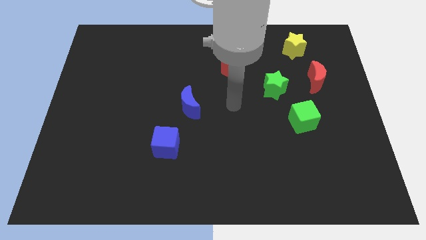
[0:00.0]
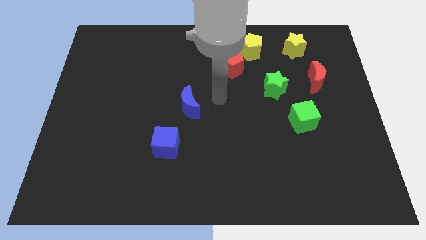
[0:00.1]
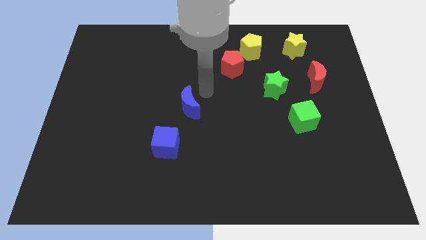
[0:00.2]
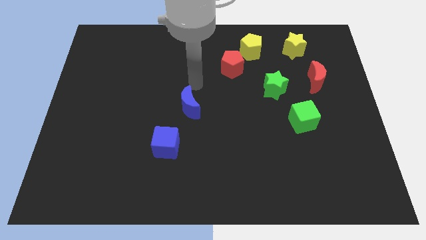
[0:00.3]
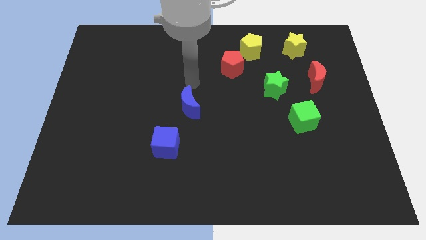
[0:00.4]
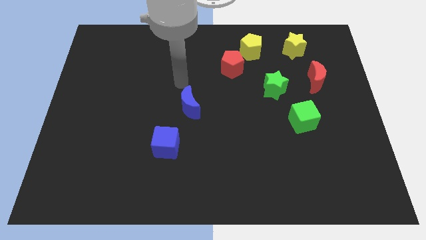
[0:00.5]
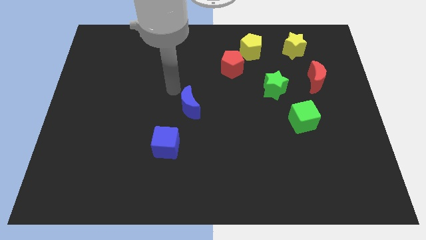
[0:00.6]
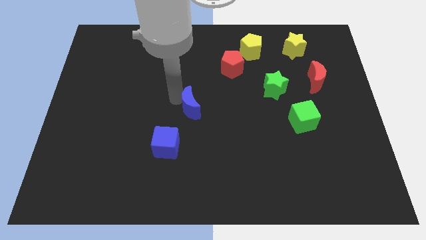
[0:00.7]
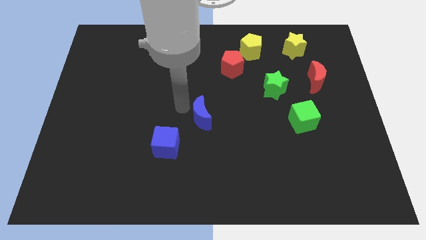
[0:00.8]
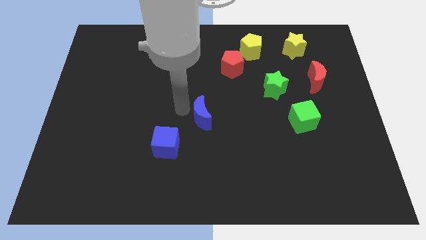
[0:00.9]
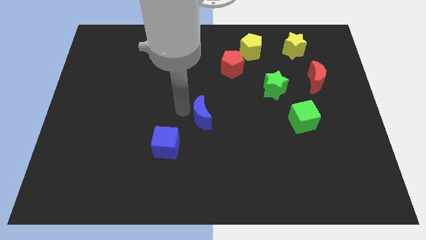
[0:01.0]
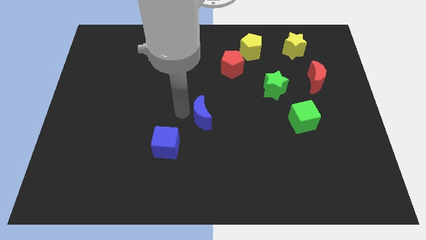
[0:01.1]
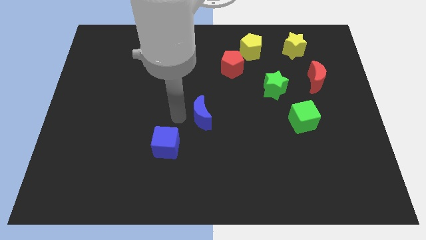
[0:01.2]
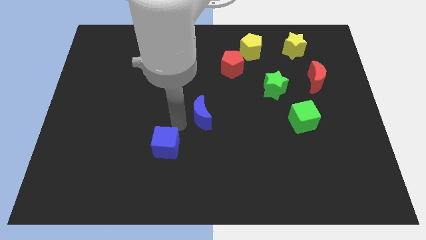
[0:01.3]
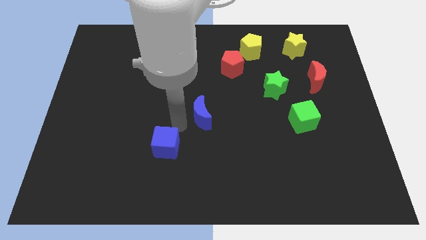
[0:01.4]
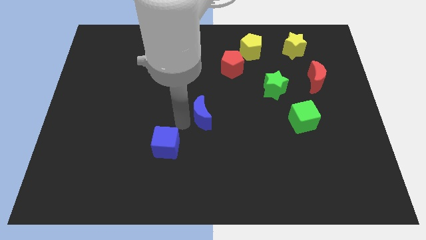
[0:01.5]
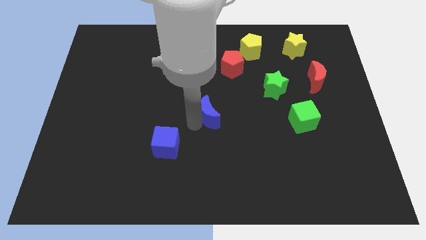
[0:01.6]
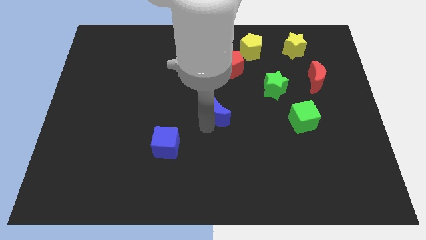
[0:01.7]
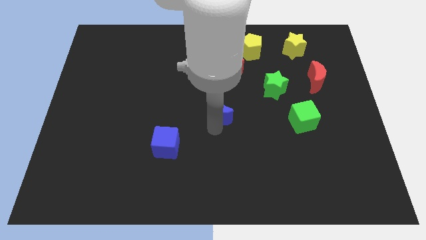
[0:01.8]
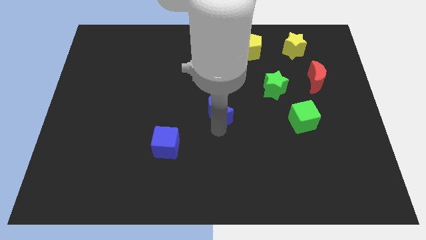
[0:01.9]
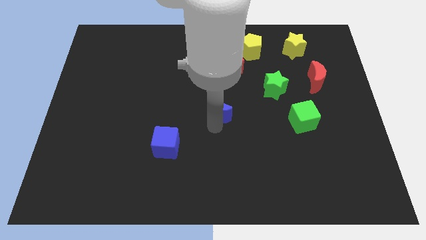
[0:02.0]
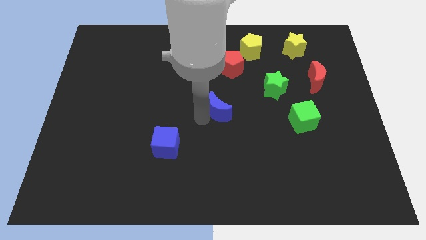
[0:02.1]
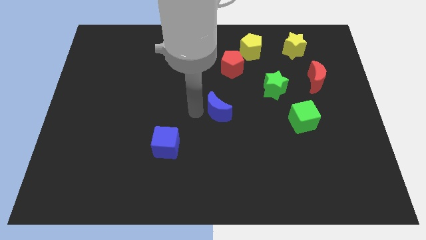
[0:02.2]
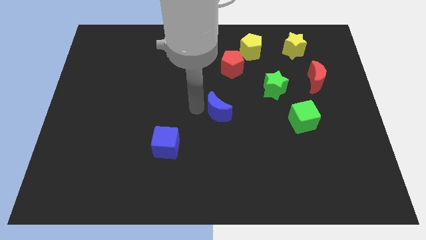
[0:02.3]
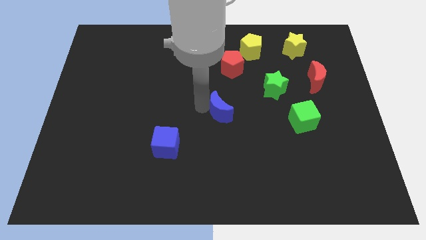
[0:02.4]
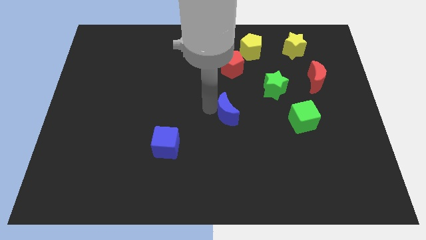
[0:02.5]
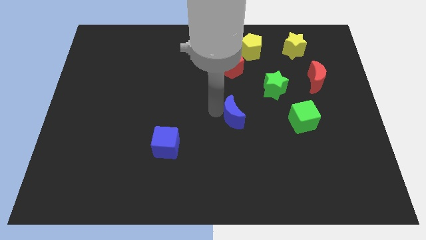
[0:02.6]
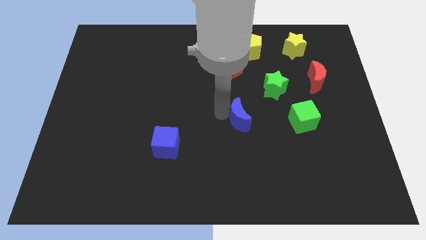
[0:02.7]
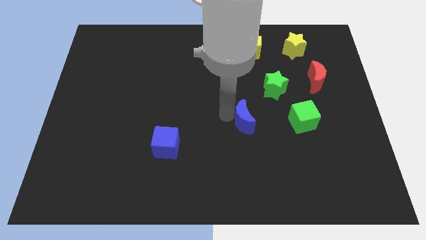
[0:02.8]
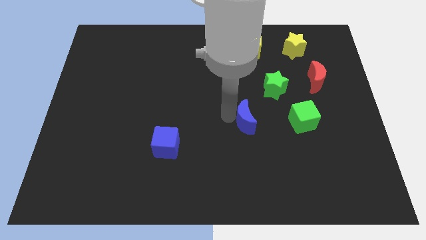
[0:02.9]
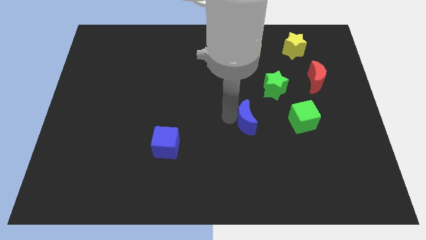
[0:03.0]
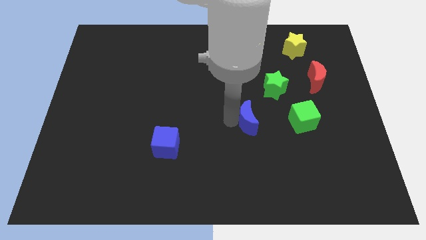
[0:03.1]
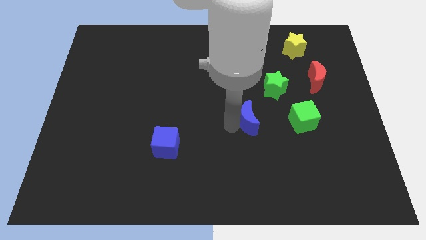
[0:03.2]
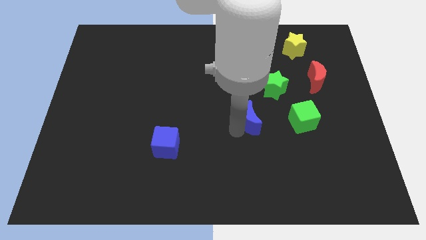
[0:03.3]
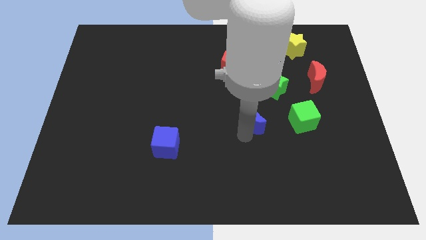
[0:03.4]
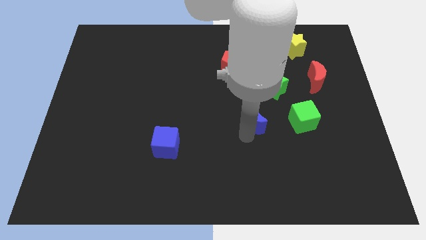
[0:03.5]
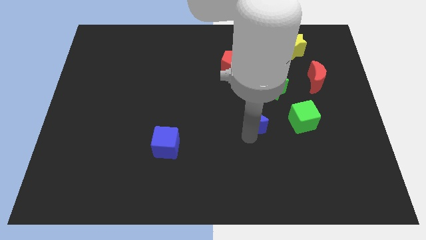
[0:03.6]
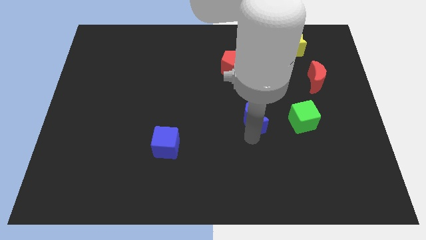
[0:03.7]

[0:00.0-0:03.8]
move the blue crescent slightly to the right side of the board

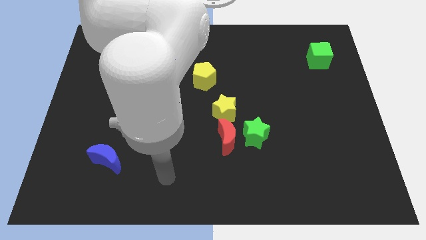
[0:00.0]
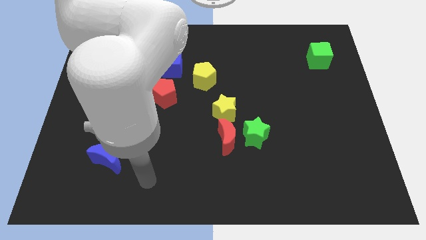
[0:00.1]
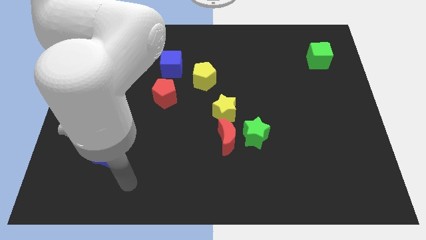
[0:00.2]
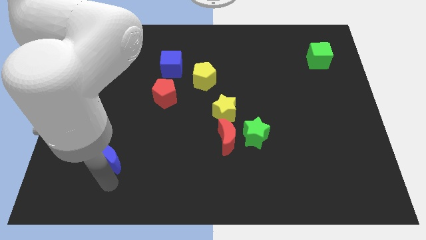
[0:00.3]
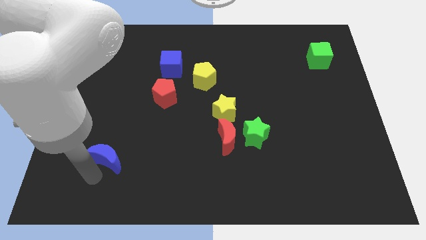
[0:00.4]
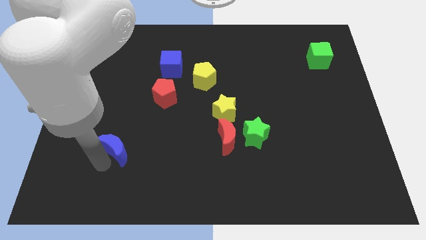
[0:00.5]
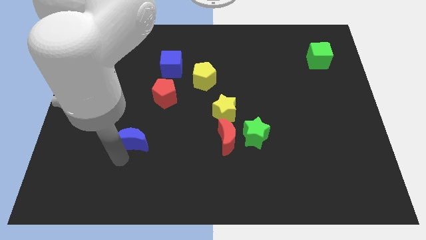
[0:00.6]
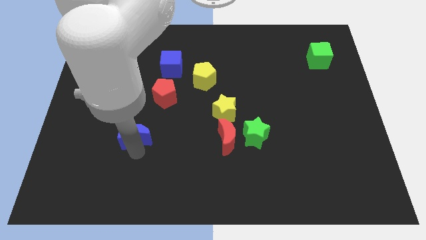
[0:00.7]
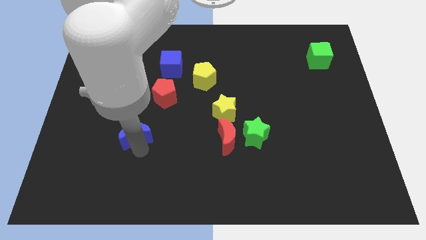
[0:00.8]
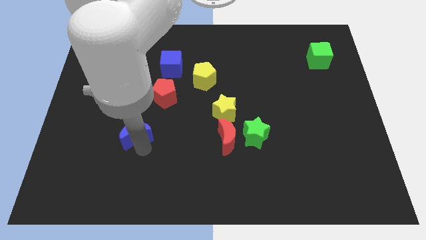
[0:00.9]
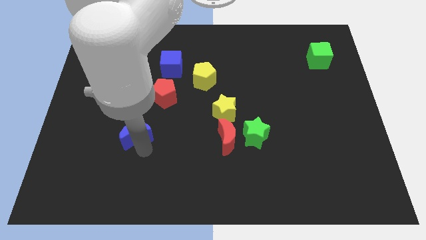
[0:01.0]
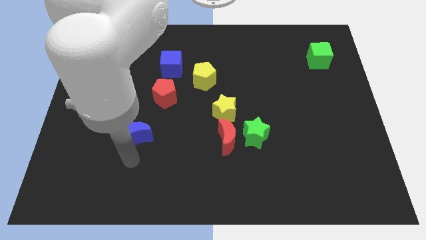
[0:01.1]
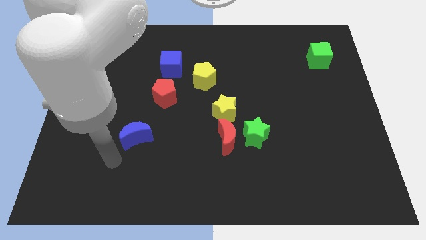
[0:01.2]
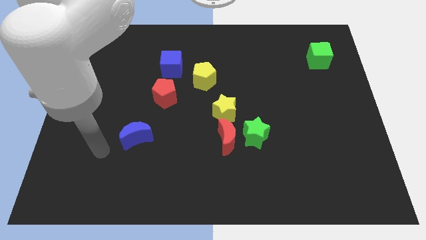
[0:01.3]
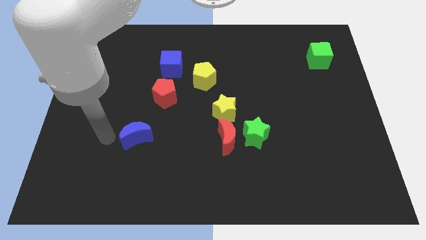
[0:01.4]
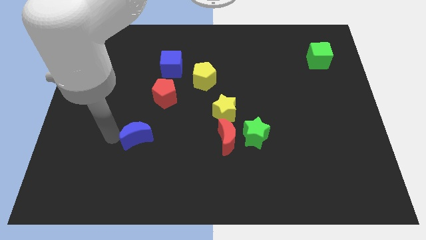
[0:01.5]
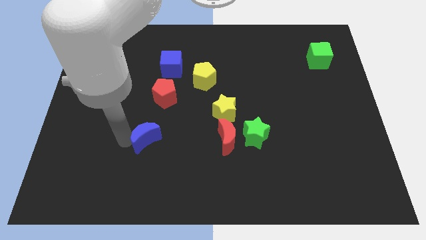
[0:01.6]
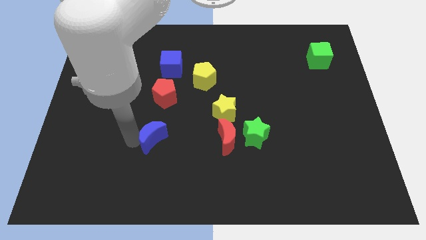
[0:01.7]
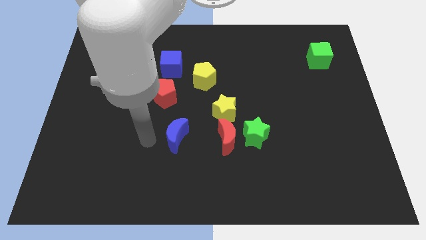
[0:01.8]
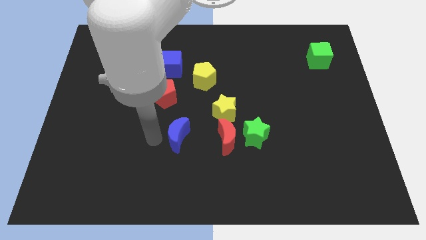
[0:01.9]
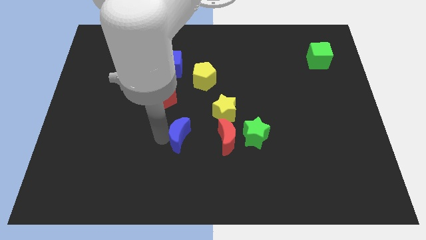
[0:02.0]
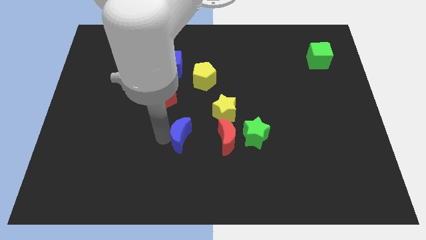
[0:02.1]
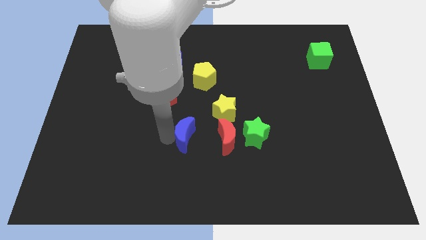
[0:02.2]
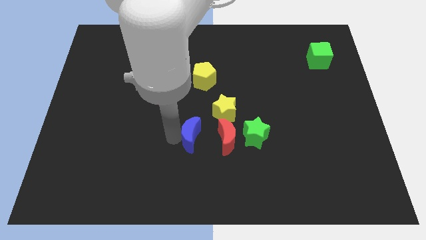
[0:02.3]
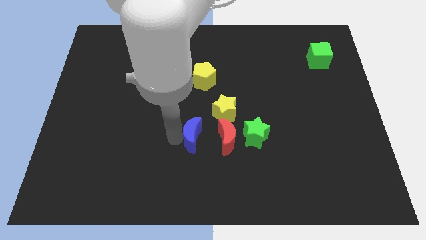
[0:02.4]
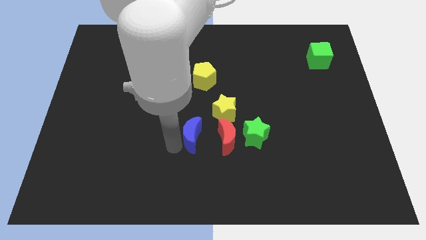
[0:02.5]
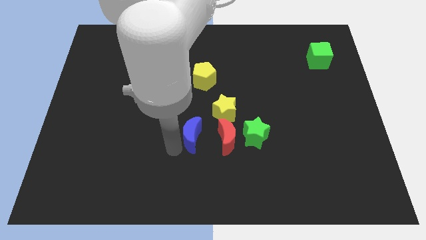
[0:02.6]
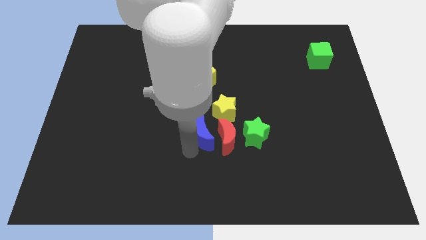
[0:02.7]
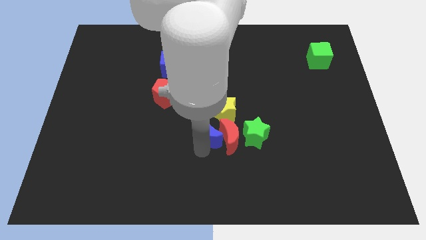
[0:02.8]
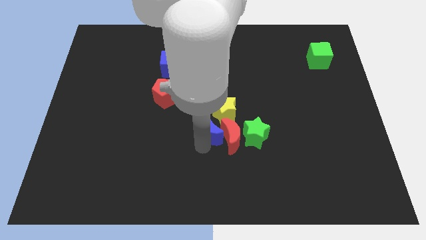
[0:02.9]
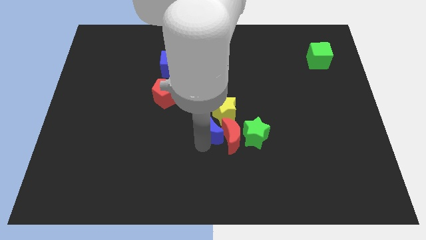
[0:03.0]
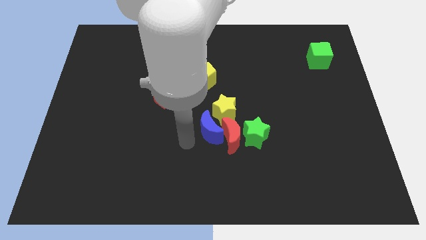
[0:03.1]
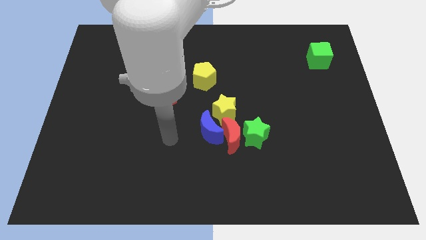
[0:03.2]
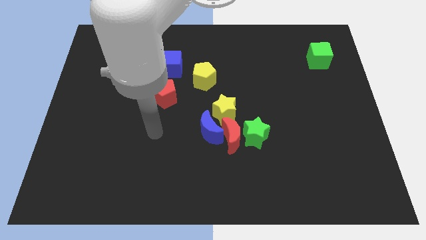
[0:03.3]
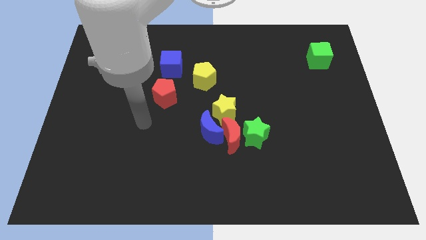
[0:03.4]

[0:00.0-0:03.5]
place the blue moon to the left of the red moon

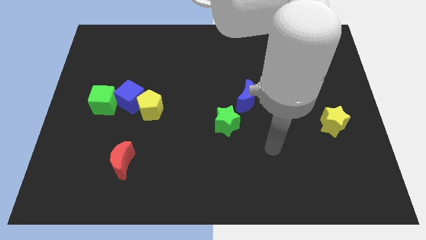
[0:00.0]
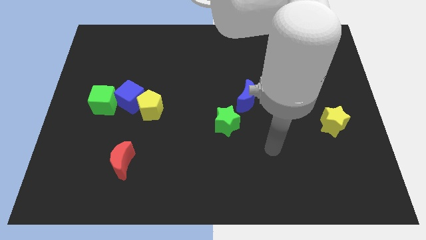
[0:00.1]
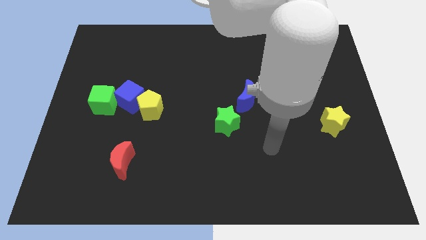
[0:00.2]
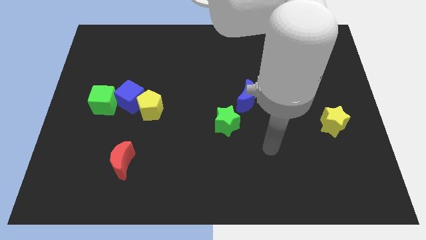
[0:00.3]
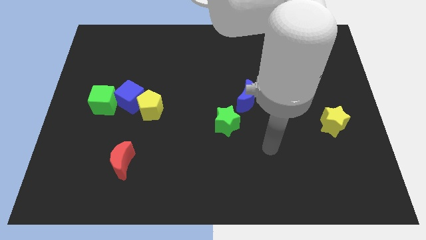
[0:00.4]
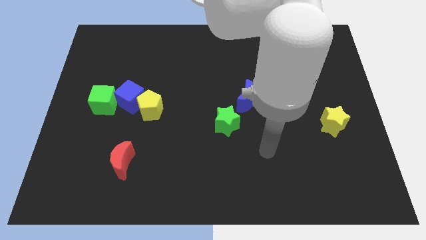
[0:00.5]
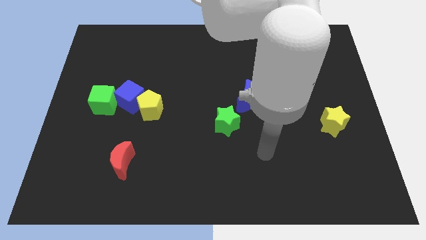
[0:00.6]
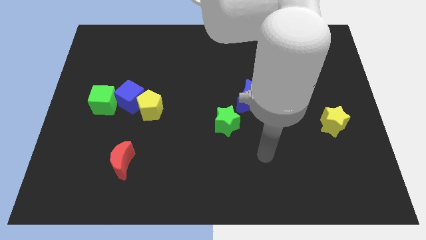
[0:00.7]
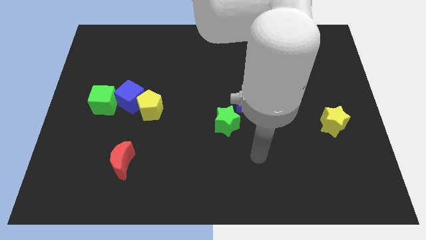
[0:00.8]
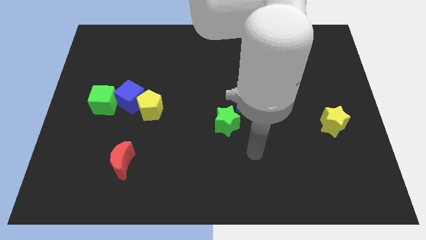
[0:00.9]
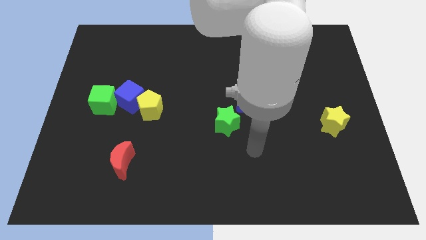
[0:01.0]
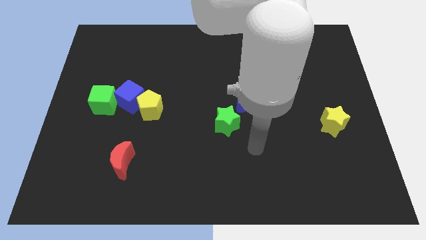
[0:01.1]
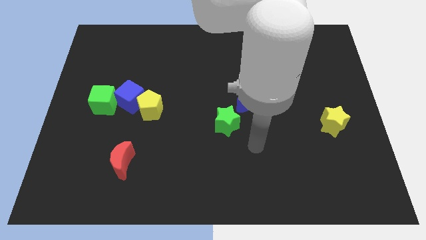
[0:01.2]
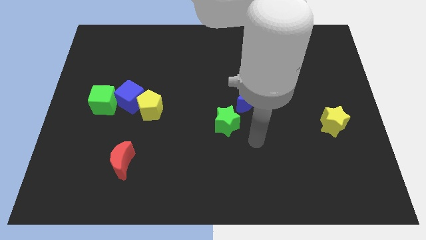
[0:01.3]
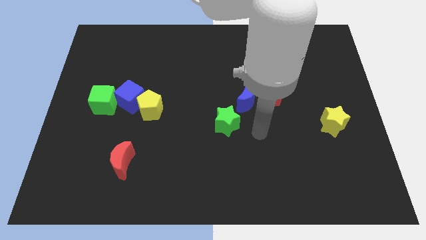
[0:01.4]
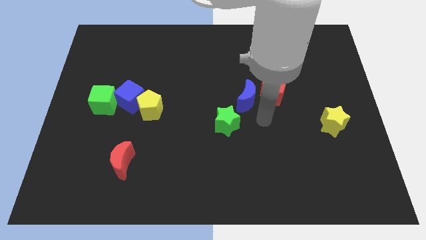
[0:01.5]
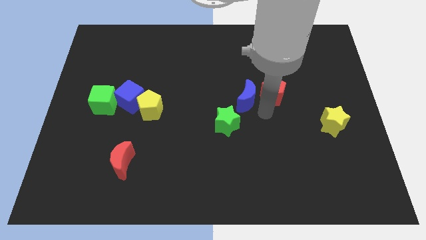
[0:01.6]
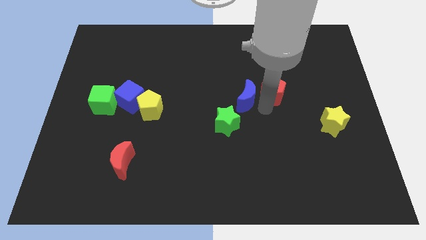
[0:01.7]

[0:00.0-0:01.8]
move your arm below the red pentagon
